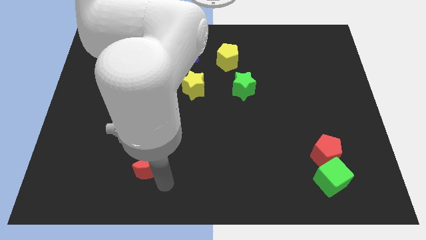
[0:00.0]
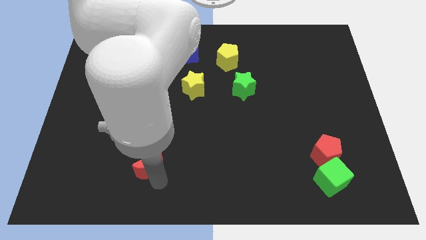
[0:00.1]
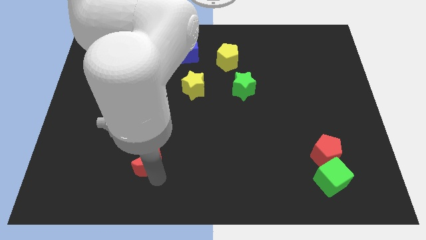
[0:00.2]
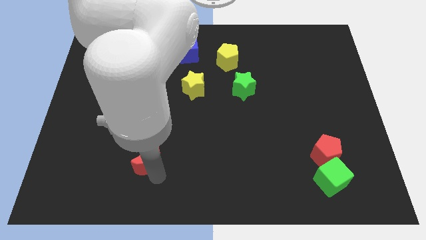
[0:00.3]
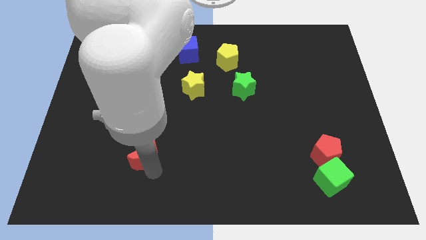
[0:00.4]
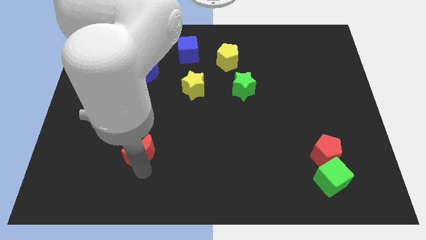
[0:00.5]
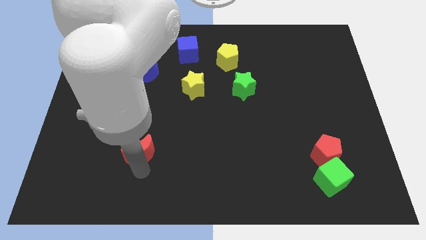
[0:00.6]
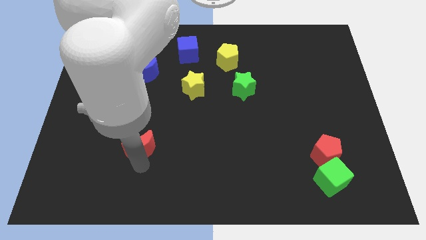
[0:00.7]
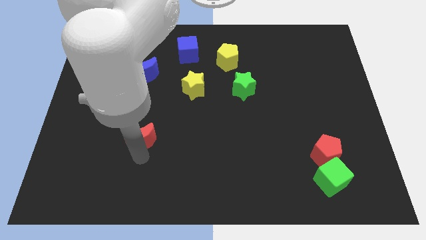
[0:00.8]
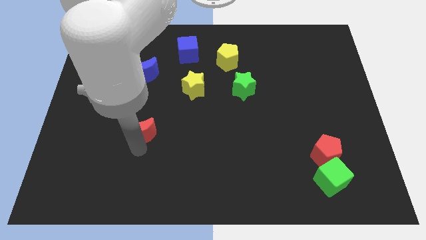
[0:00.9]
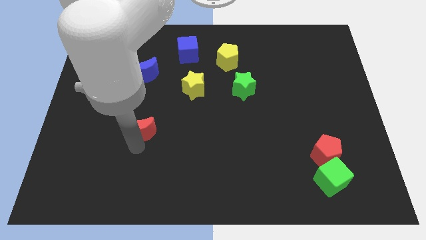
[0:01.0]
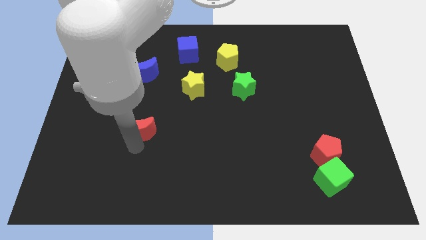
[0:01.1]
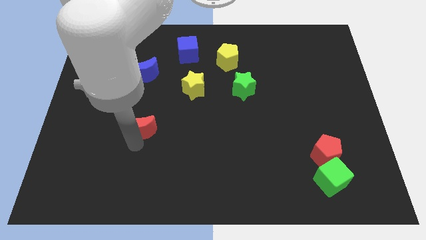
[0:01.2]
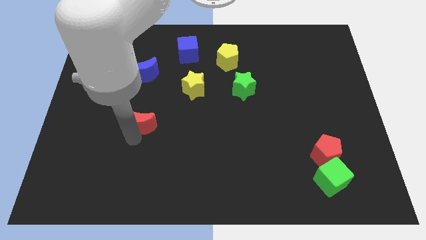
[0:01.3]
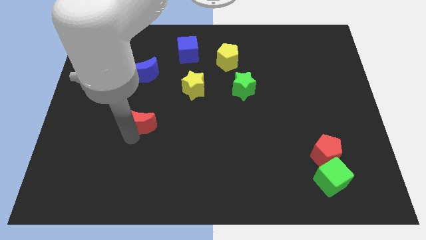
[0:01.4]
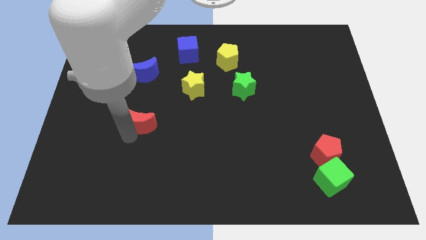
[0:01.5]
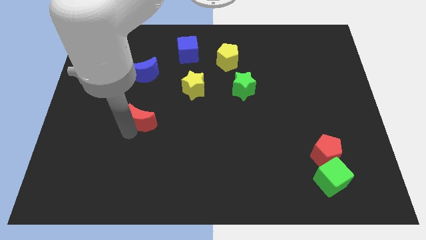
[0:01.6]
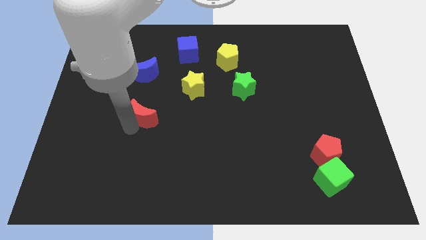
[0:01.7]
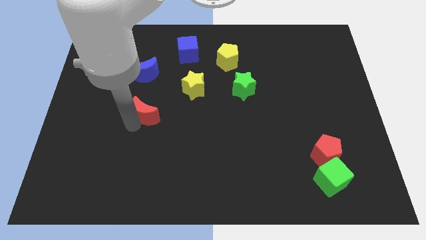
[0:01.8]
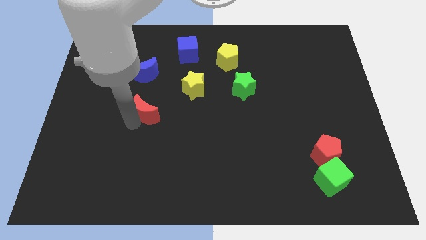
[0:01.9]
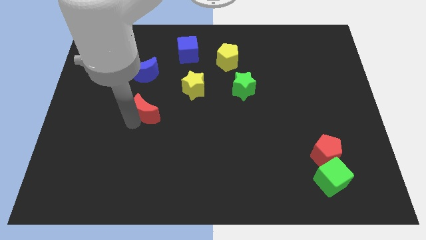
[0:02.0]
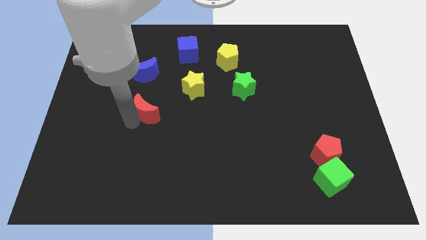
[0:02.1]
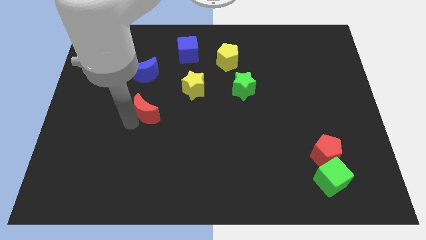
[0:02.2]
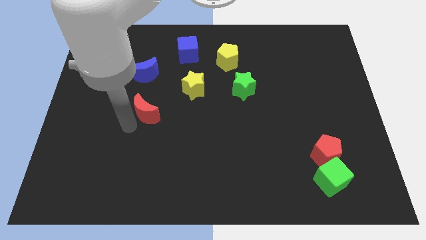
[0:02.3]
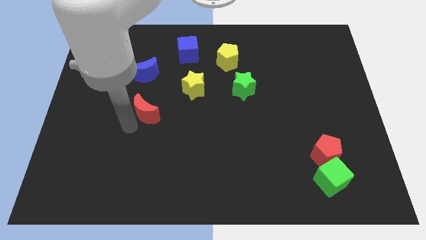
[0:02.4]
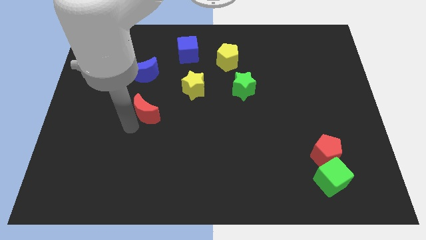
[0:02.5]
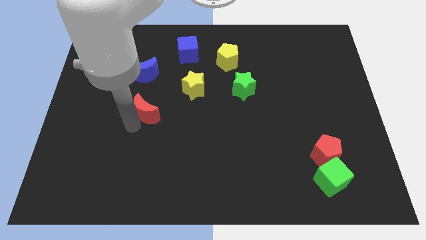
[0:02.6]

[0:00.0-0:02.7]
place red moon to the center of the board

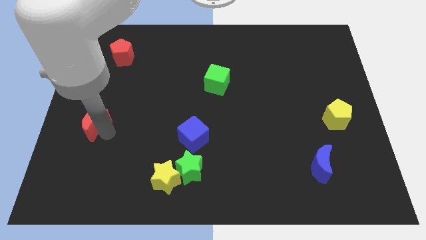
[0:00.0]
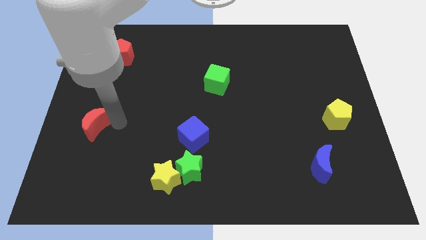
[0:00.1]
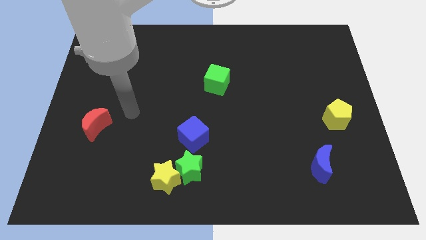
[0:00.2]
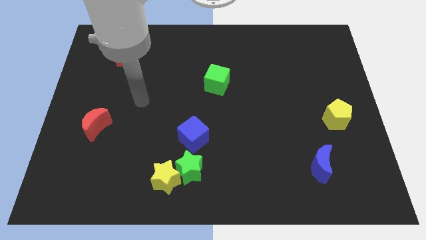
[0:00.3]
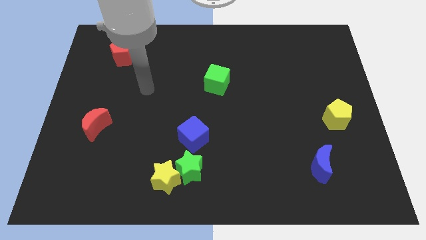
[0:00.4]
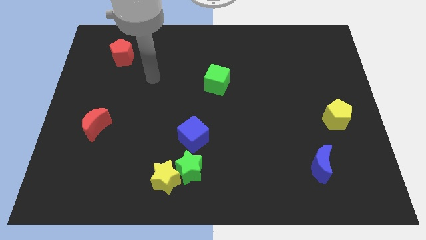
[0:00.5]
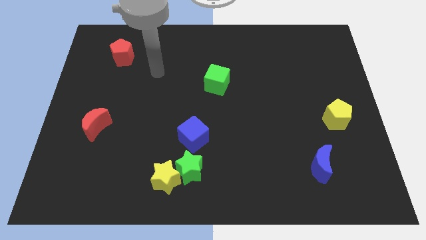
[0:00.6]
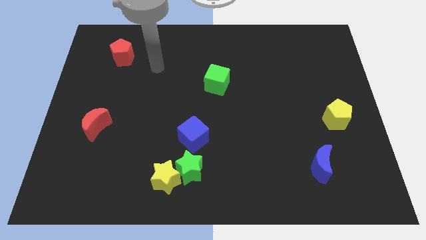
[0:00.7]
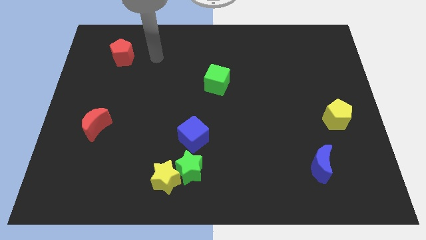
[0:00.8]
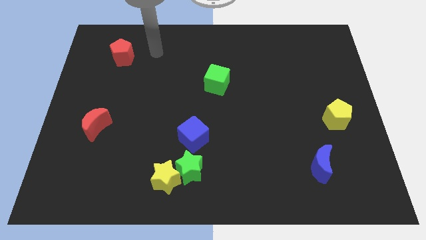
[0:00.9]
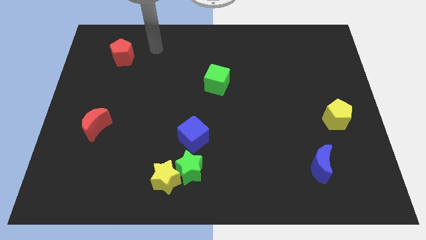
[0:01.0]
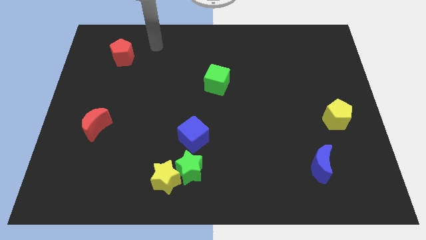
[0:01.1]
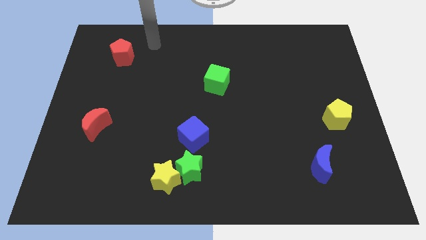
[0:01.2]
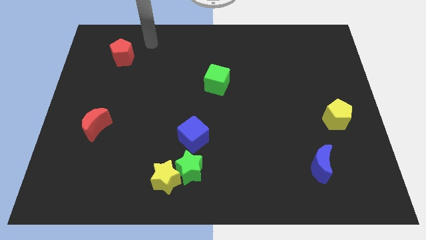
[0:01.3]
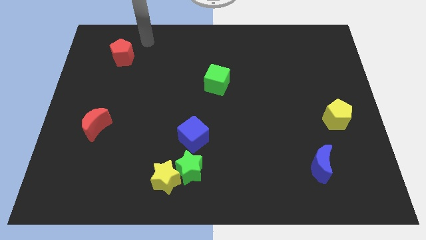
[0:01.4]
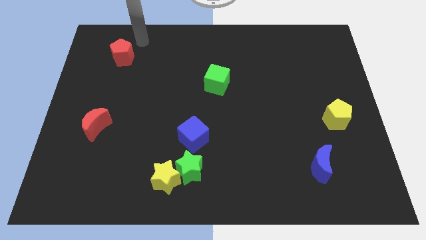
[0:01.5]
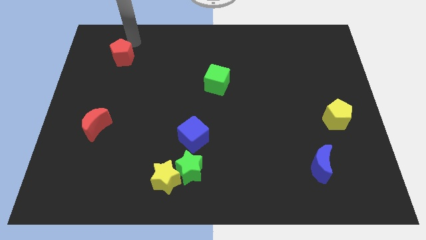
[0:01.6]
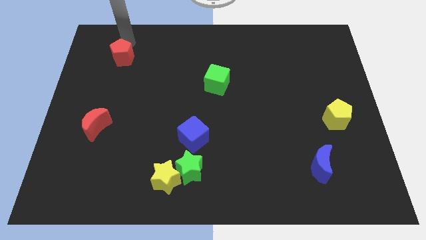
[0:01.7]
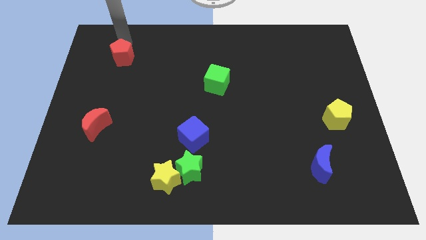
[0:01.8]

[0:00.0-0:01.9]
point the arm at the top of red pentagon

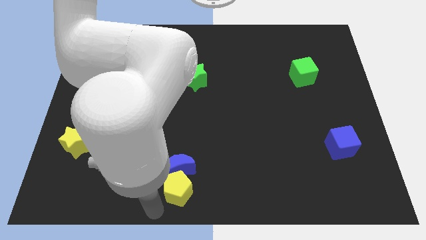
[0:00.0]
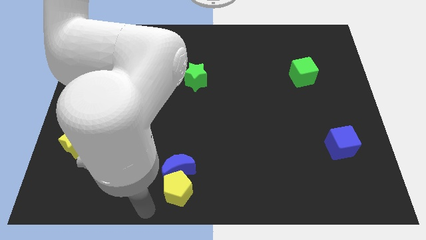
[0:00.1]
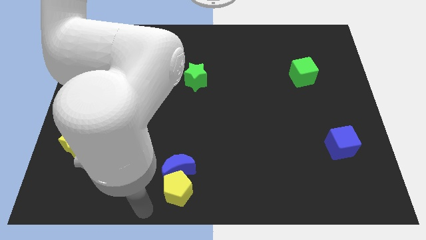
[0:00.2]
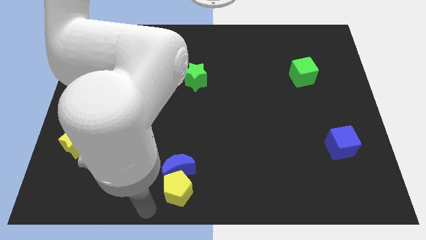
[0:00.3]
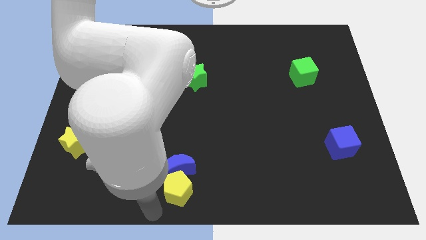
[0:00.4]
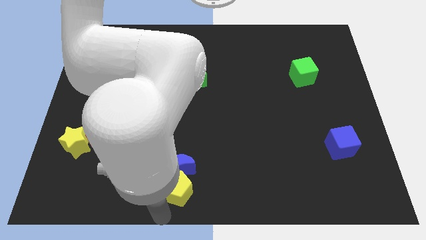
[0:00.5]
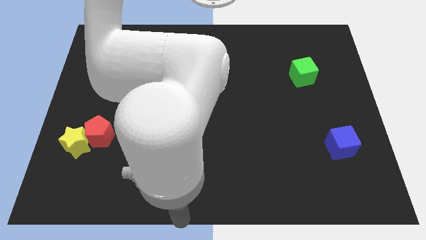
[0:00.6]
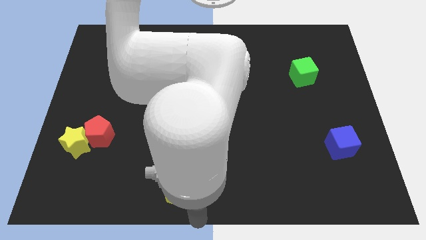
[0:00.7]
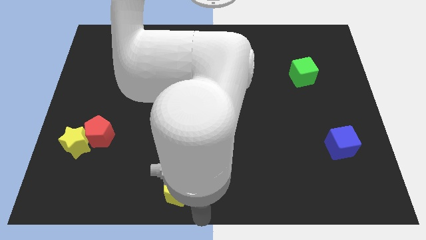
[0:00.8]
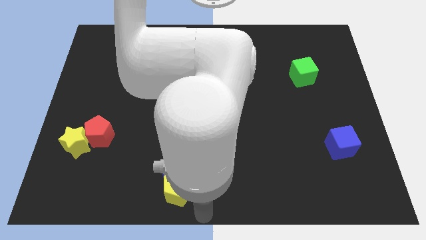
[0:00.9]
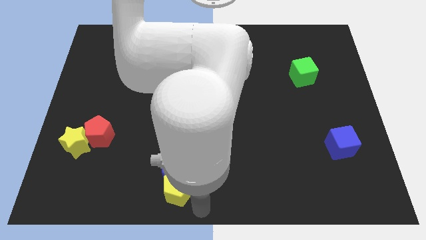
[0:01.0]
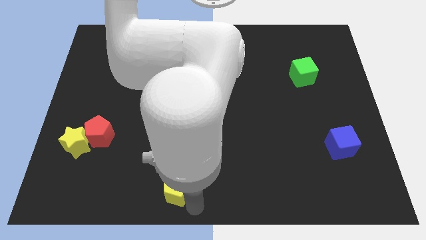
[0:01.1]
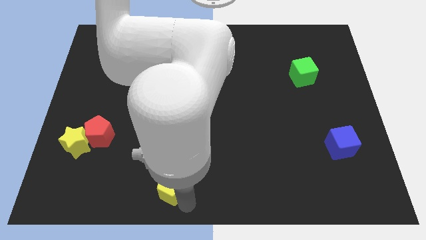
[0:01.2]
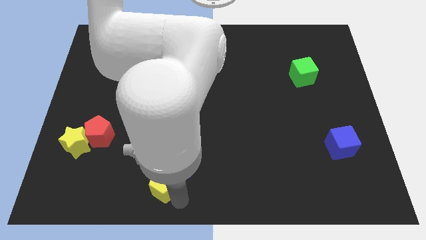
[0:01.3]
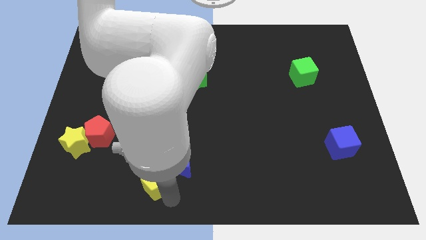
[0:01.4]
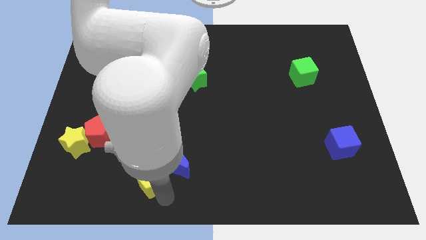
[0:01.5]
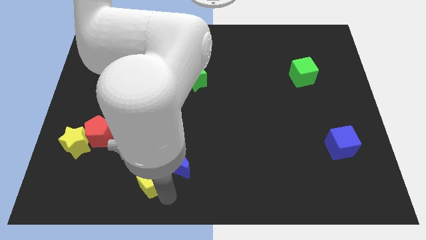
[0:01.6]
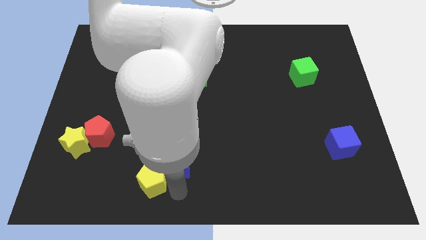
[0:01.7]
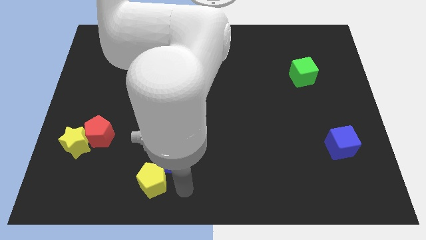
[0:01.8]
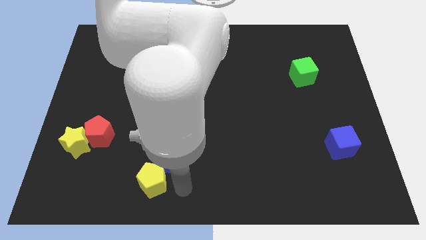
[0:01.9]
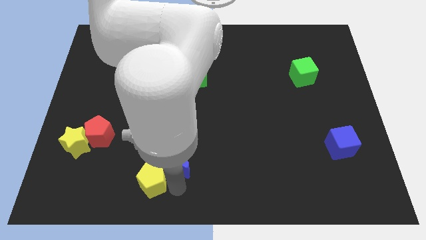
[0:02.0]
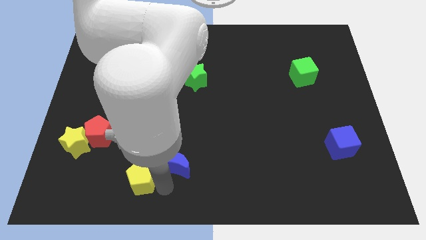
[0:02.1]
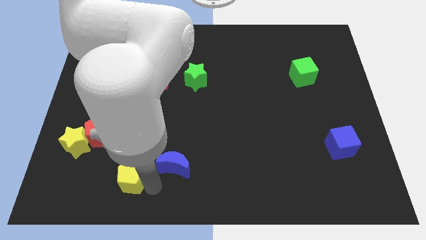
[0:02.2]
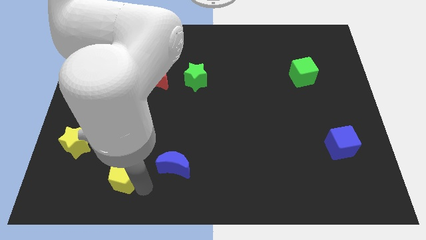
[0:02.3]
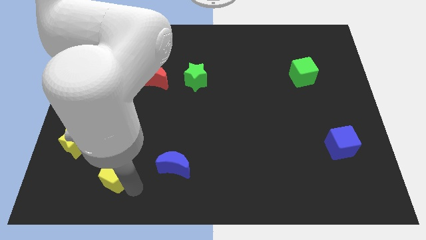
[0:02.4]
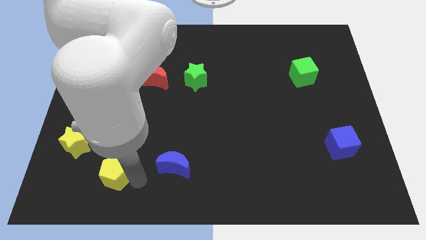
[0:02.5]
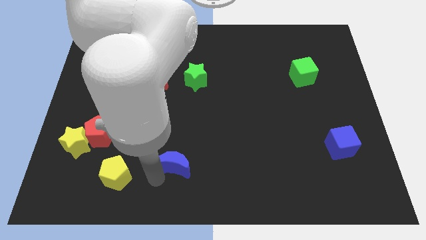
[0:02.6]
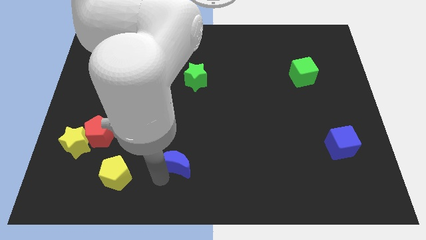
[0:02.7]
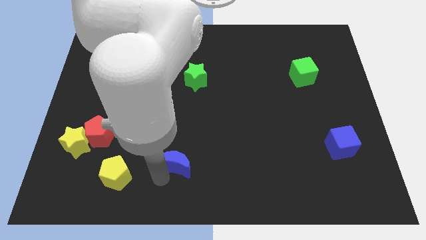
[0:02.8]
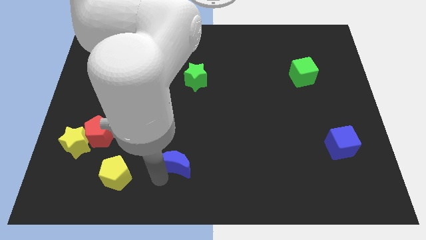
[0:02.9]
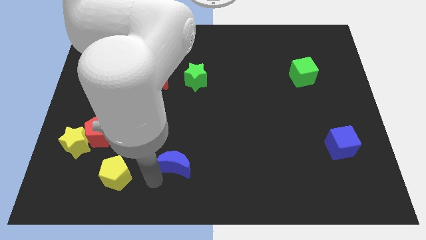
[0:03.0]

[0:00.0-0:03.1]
place the yellow pentagon at the left of the blue crescent

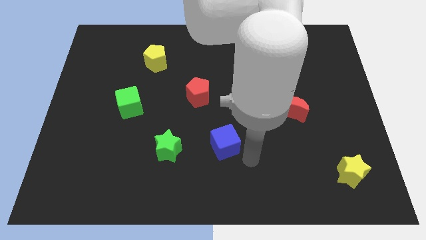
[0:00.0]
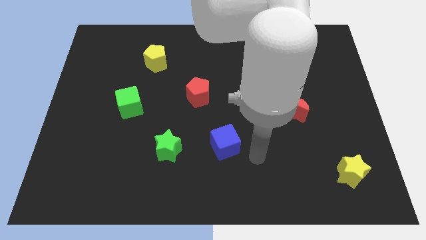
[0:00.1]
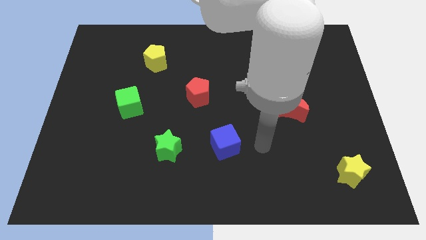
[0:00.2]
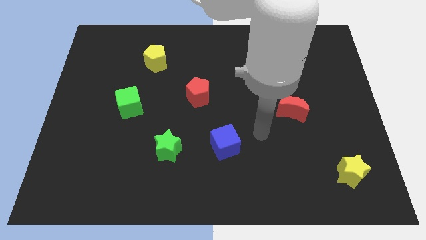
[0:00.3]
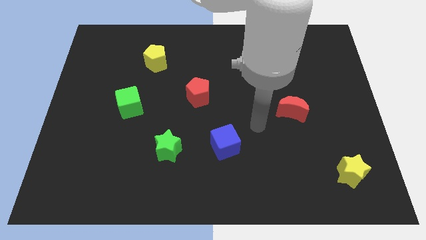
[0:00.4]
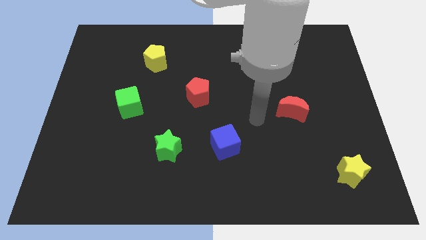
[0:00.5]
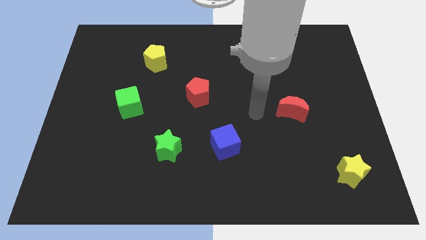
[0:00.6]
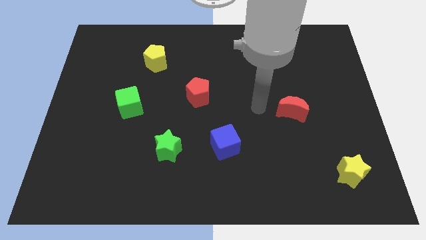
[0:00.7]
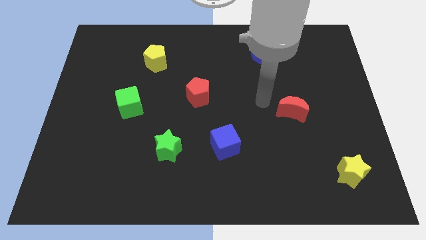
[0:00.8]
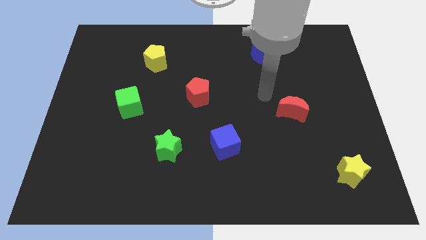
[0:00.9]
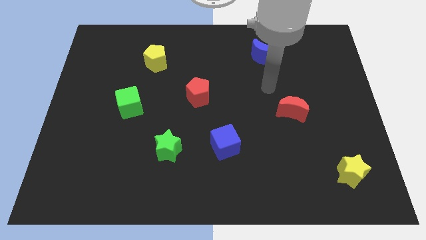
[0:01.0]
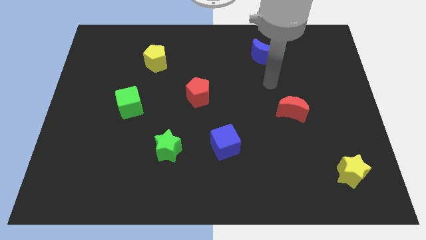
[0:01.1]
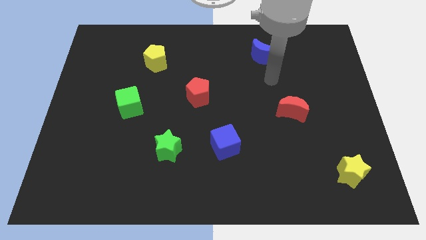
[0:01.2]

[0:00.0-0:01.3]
point yourself in between the blue moon and red moon
